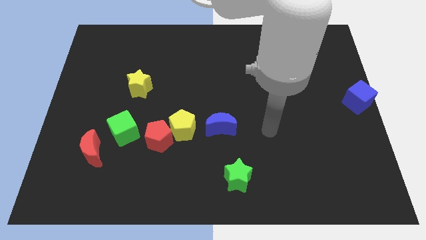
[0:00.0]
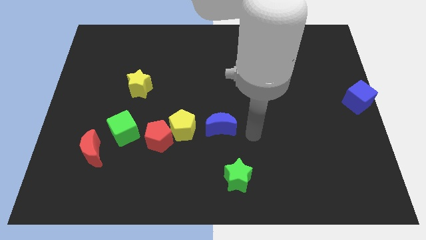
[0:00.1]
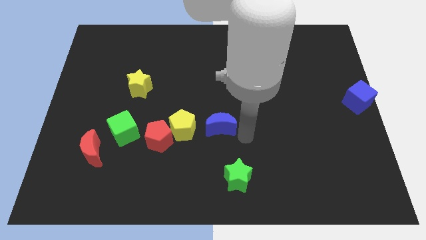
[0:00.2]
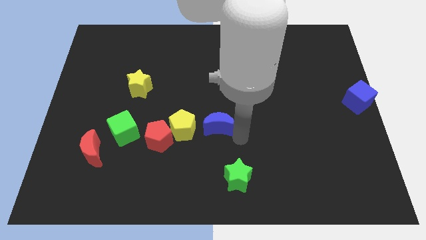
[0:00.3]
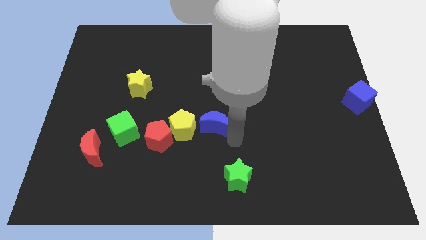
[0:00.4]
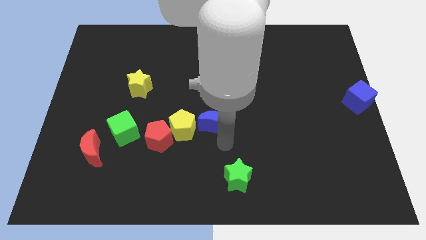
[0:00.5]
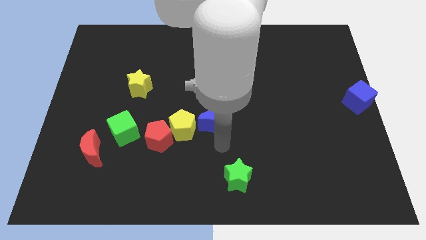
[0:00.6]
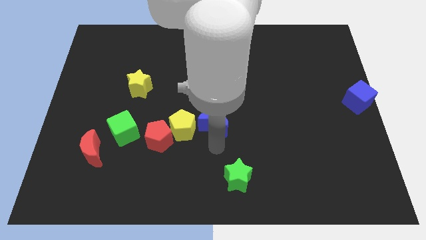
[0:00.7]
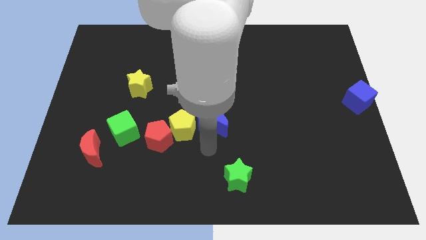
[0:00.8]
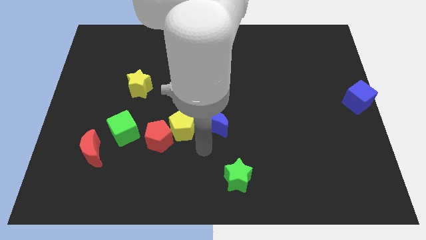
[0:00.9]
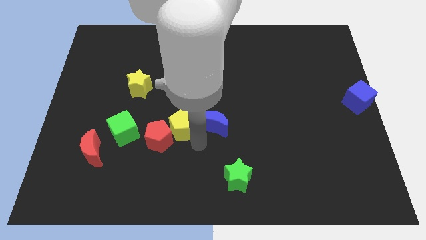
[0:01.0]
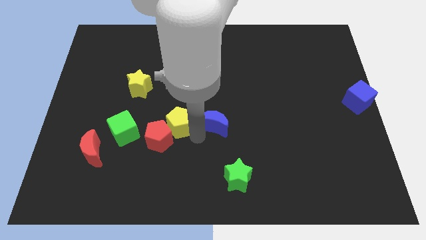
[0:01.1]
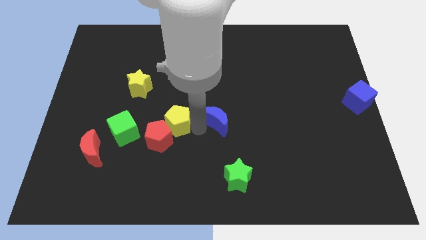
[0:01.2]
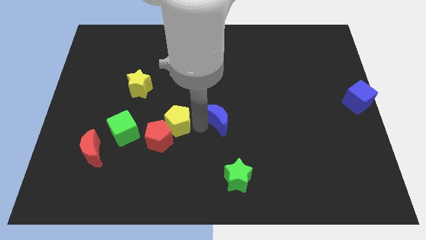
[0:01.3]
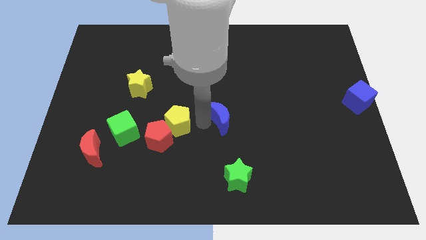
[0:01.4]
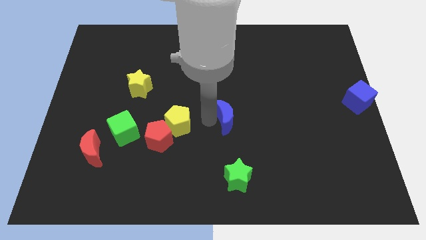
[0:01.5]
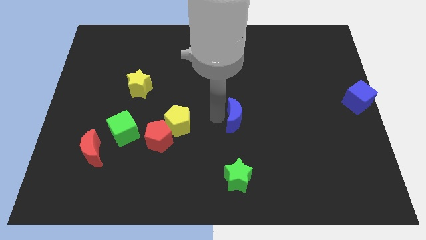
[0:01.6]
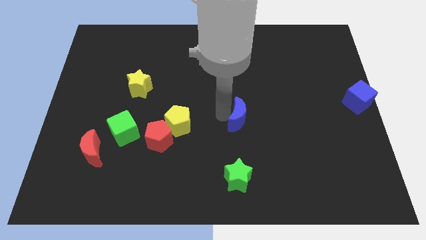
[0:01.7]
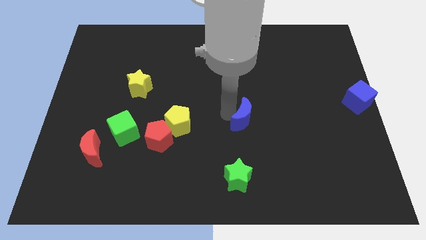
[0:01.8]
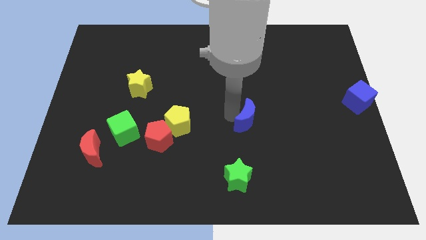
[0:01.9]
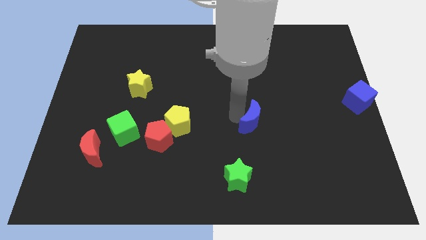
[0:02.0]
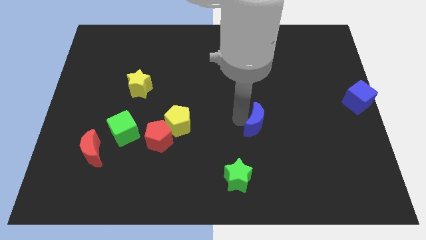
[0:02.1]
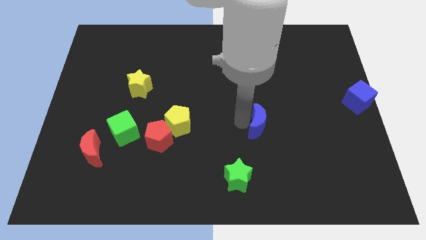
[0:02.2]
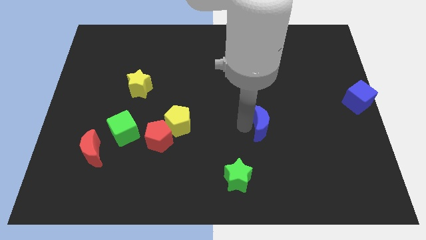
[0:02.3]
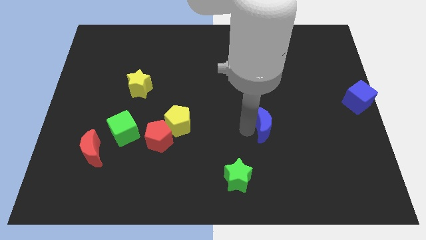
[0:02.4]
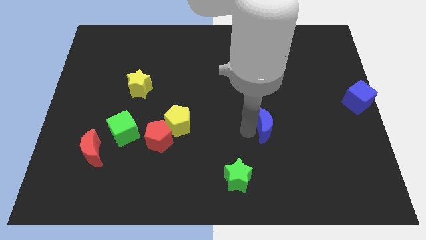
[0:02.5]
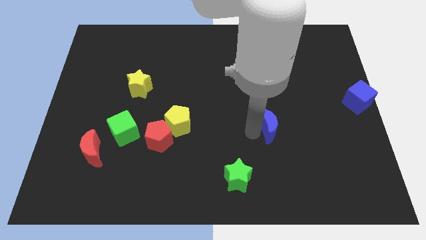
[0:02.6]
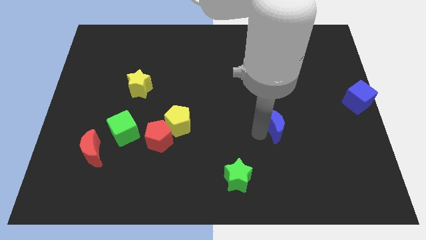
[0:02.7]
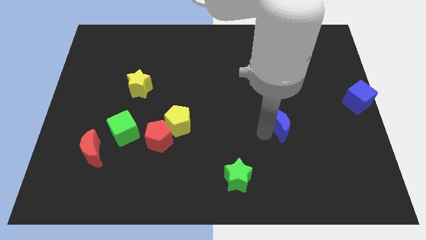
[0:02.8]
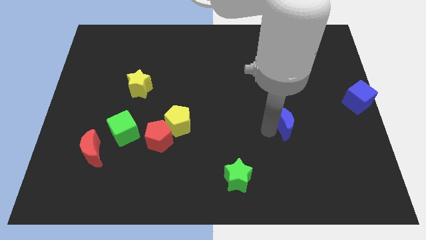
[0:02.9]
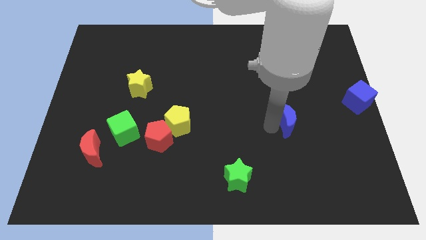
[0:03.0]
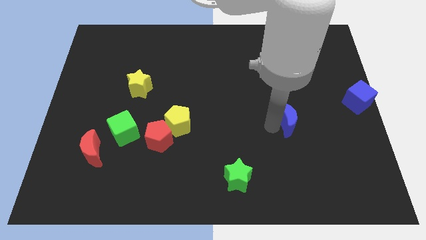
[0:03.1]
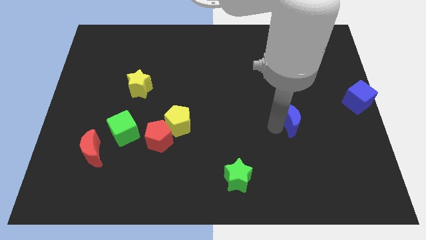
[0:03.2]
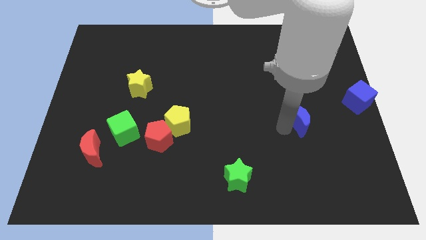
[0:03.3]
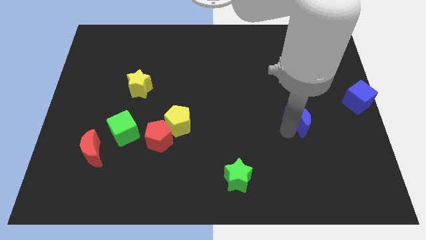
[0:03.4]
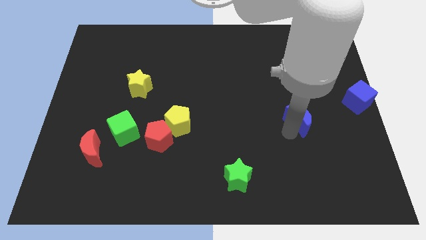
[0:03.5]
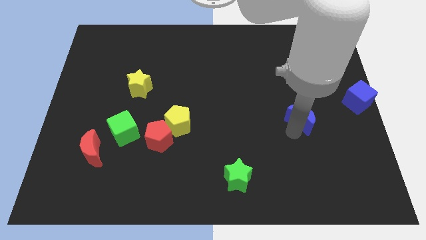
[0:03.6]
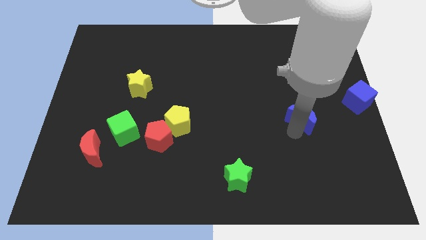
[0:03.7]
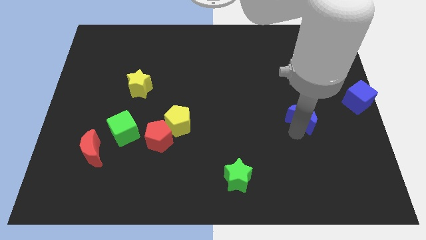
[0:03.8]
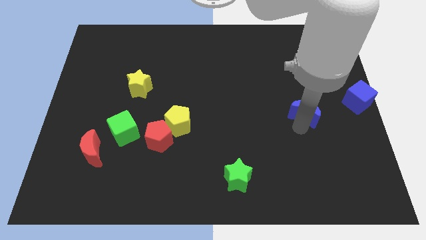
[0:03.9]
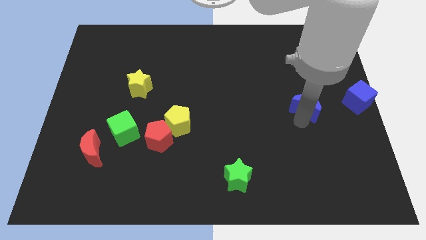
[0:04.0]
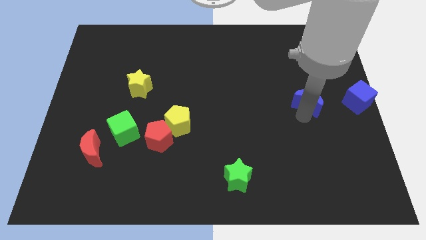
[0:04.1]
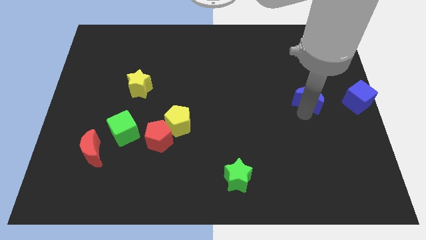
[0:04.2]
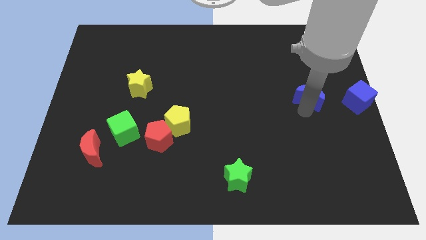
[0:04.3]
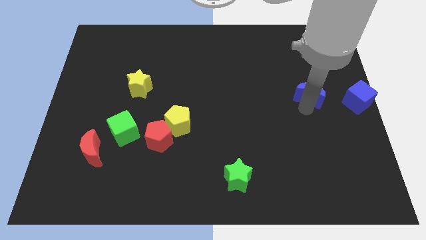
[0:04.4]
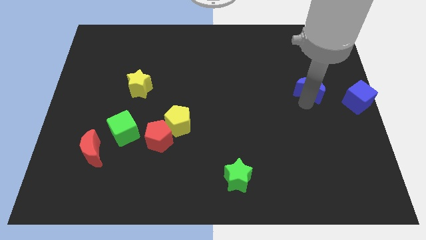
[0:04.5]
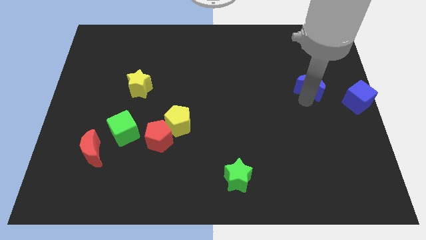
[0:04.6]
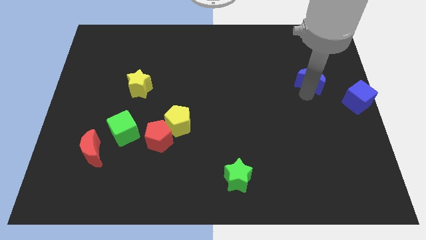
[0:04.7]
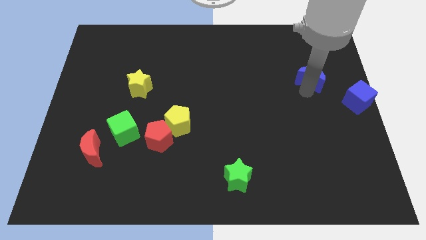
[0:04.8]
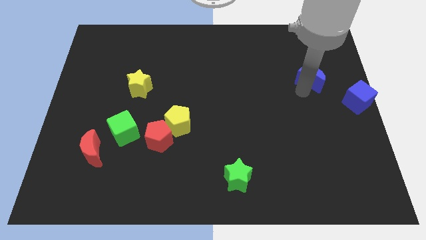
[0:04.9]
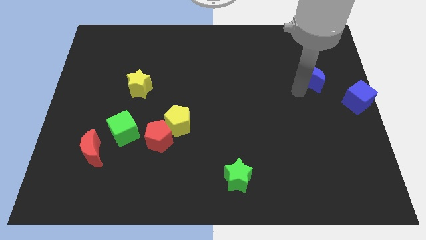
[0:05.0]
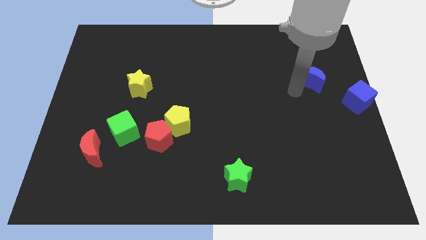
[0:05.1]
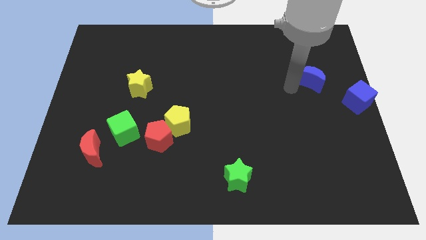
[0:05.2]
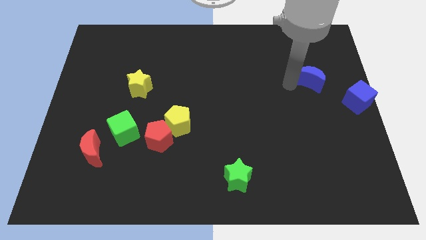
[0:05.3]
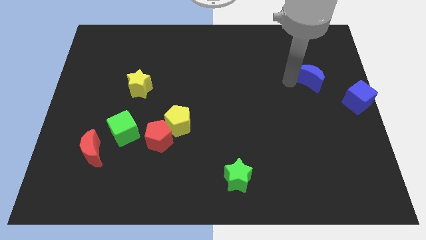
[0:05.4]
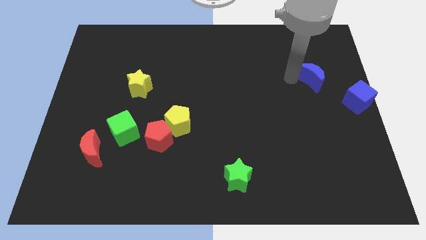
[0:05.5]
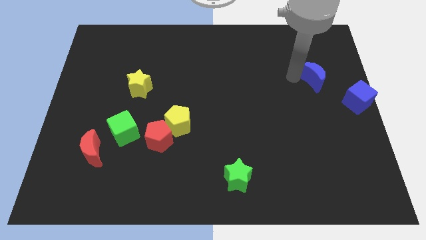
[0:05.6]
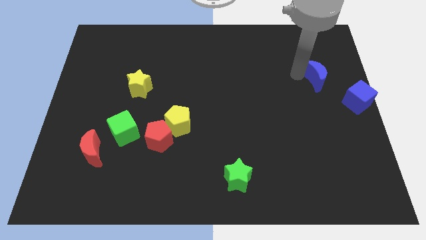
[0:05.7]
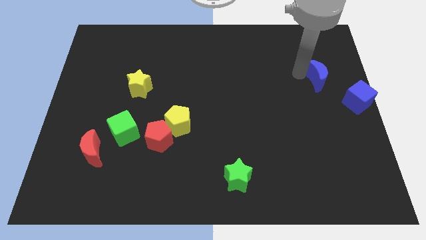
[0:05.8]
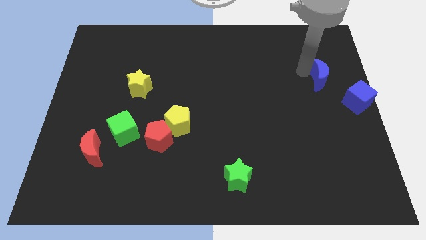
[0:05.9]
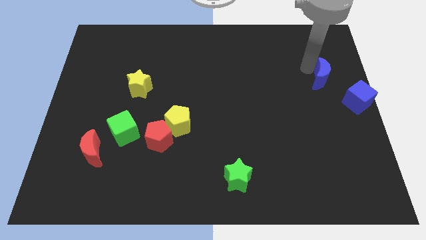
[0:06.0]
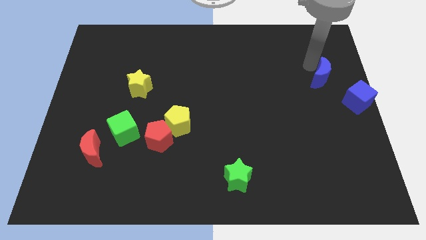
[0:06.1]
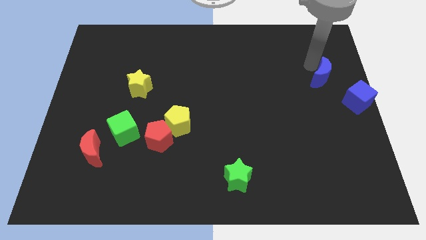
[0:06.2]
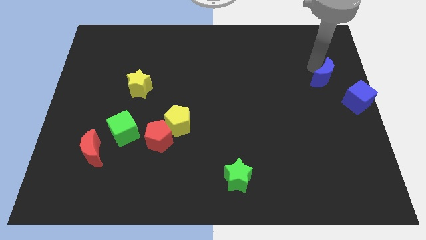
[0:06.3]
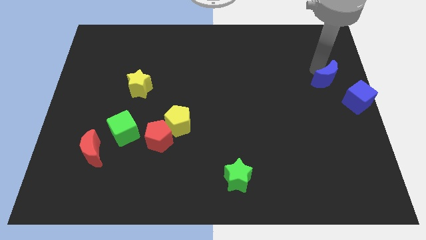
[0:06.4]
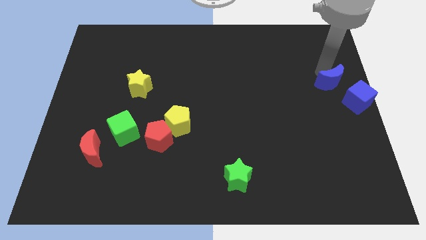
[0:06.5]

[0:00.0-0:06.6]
move the blue crescent towards the blue cube

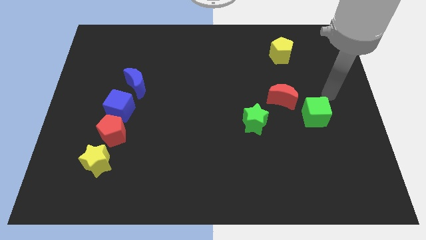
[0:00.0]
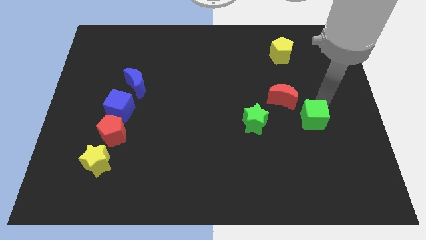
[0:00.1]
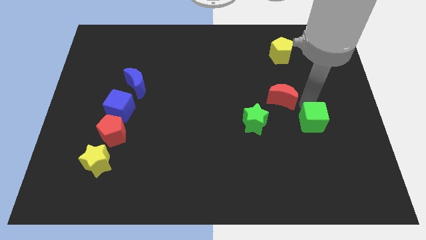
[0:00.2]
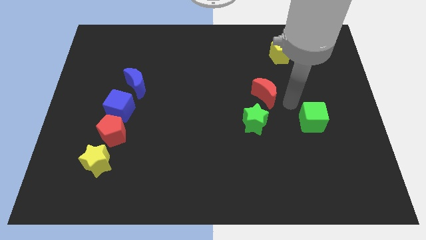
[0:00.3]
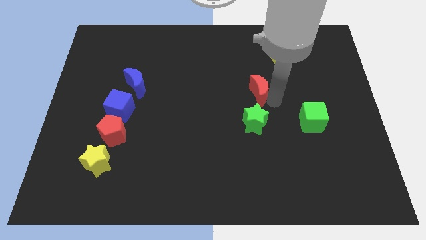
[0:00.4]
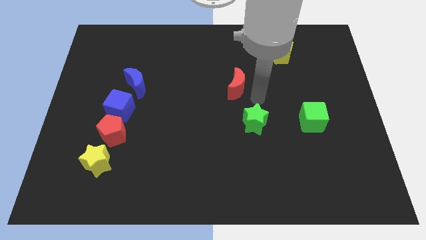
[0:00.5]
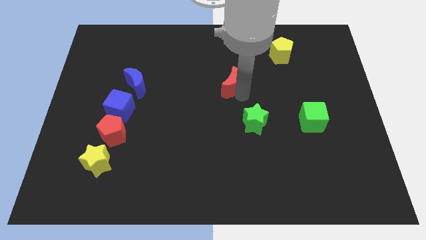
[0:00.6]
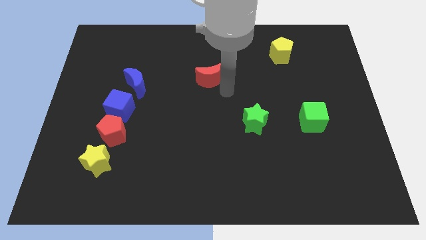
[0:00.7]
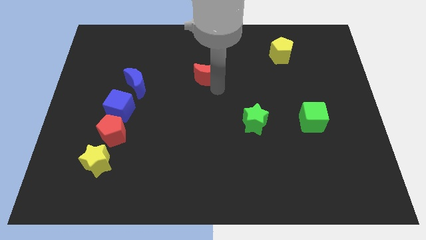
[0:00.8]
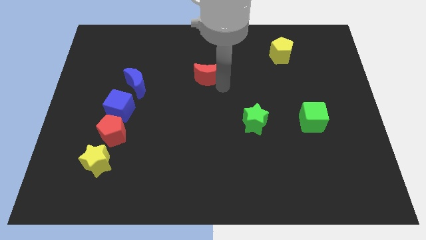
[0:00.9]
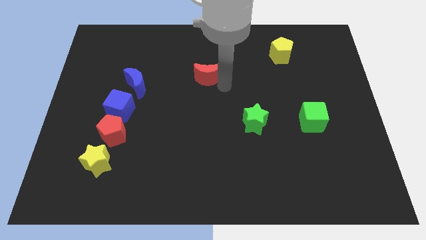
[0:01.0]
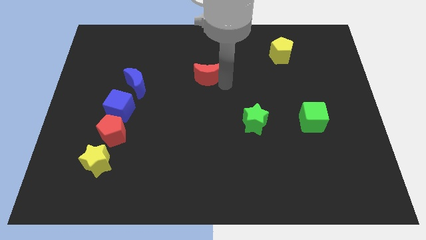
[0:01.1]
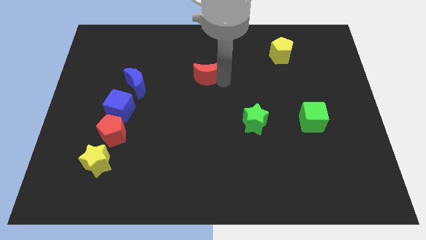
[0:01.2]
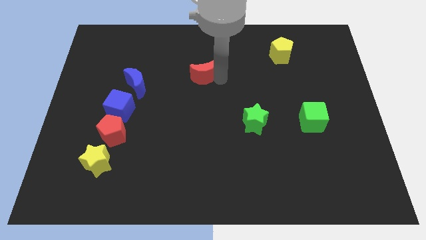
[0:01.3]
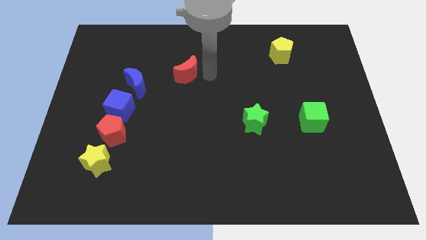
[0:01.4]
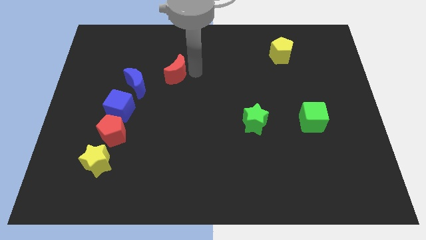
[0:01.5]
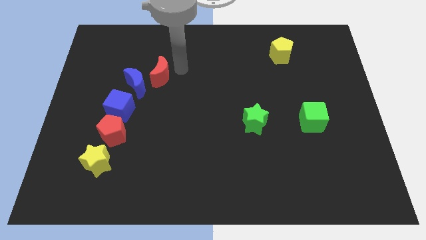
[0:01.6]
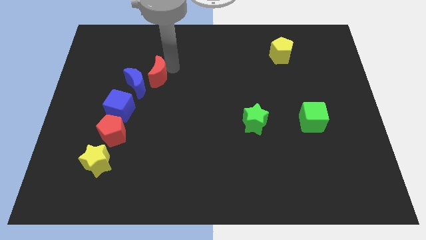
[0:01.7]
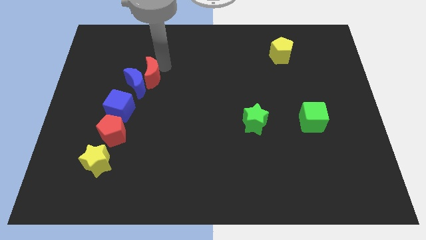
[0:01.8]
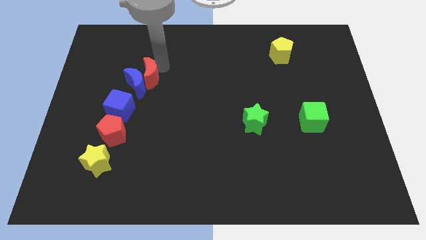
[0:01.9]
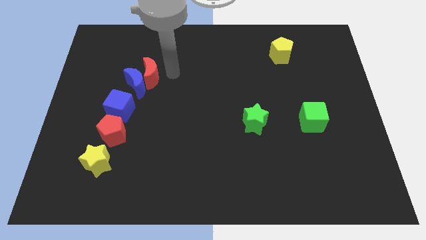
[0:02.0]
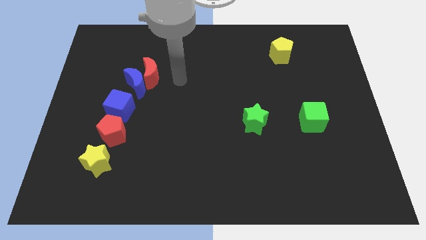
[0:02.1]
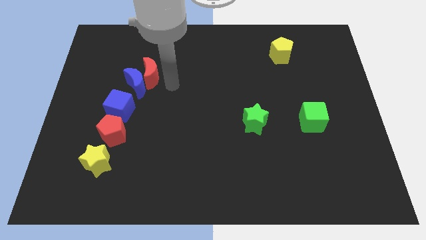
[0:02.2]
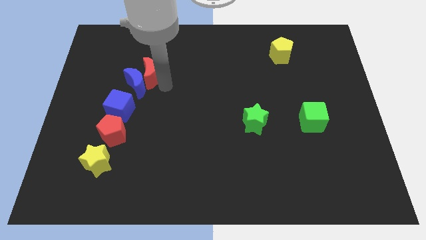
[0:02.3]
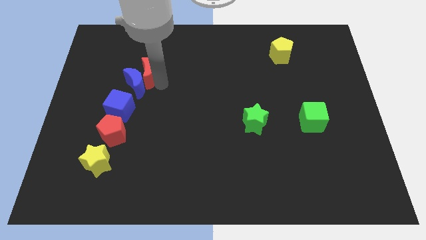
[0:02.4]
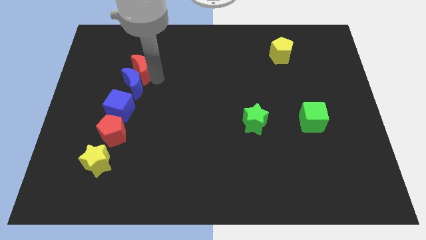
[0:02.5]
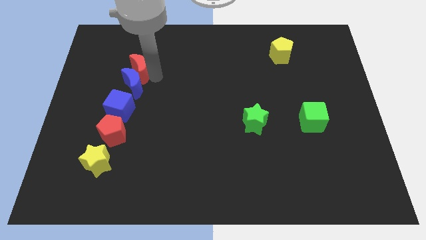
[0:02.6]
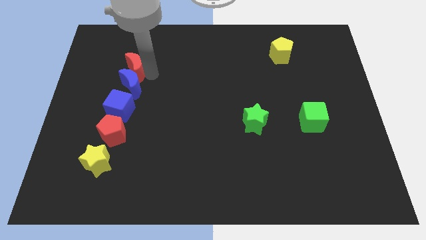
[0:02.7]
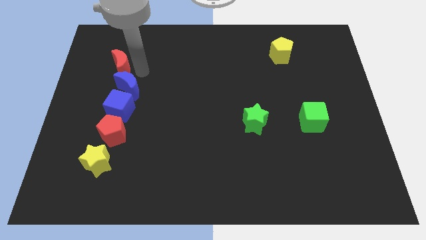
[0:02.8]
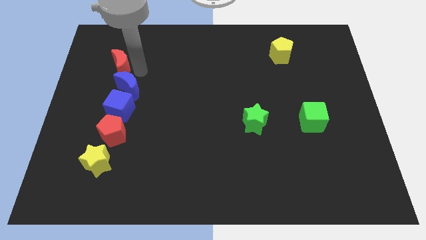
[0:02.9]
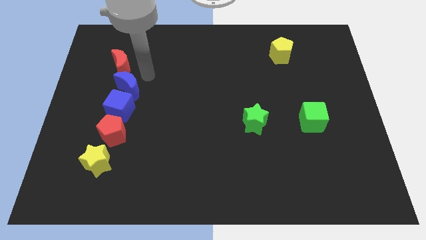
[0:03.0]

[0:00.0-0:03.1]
place the red moon above the blue moon
